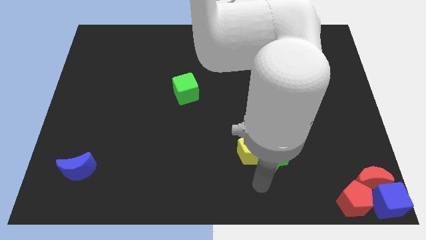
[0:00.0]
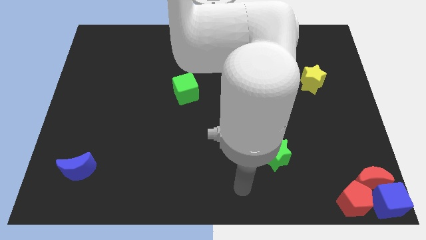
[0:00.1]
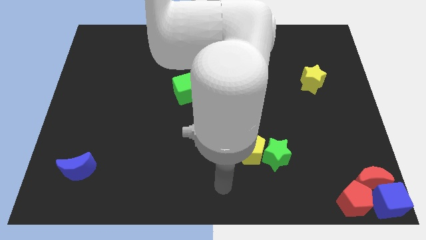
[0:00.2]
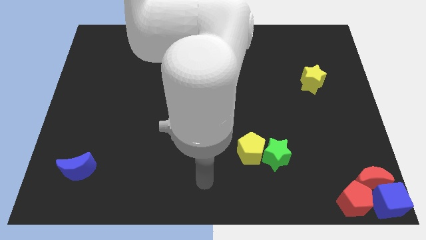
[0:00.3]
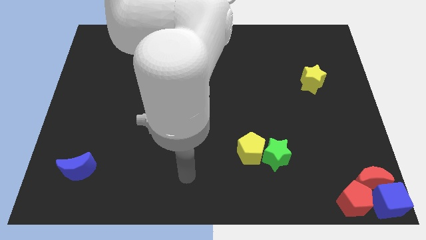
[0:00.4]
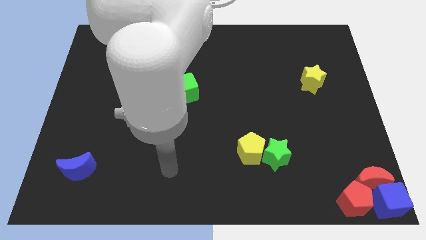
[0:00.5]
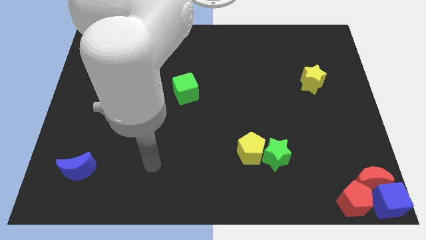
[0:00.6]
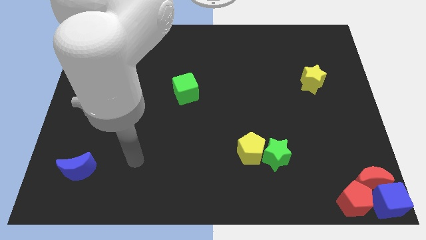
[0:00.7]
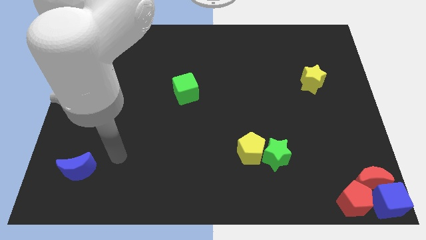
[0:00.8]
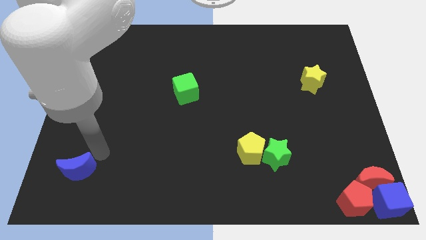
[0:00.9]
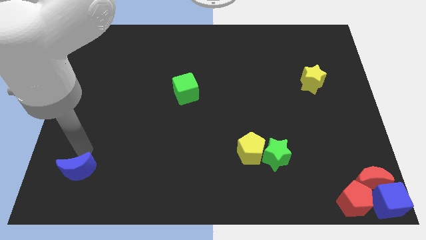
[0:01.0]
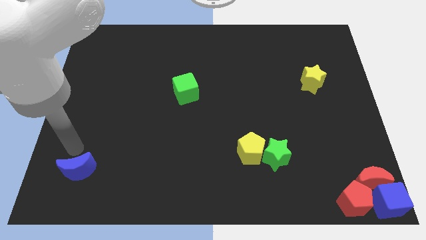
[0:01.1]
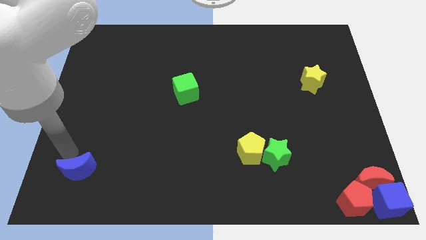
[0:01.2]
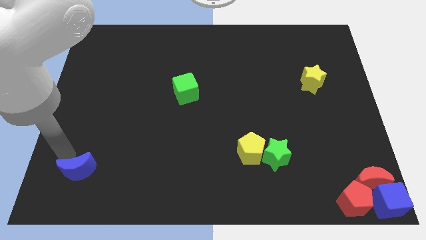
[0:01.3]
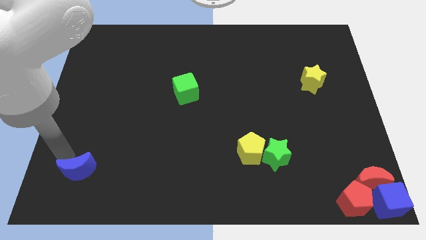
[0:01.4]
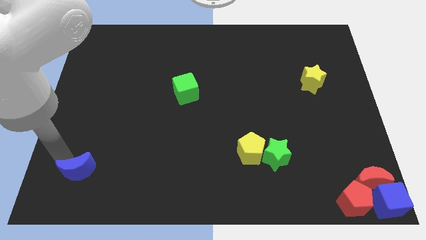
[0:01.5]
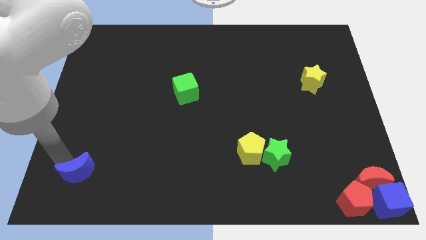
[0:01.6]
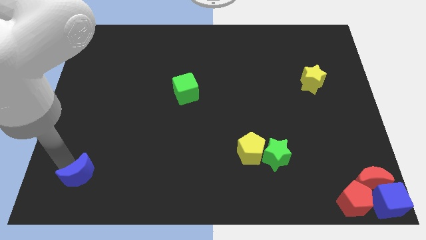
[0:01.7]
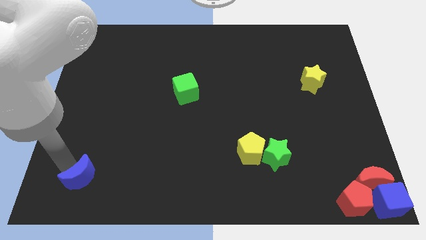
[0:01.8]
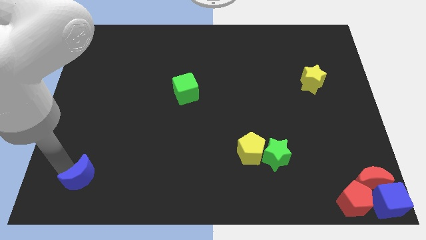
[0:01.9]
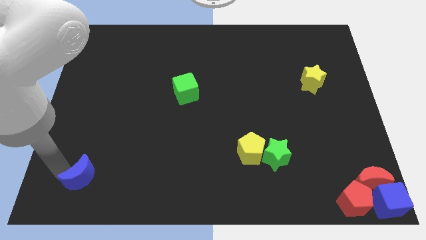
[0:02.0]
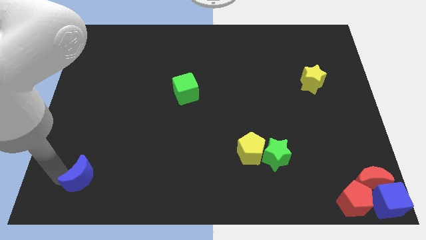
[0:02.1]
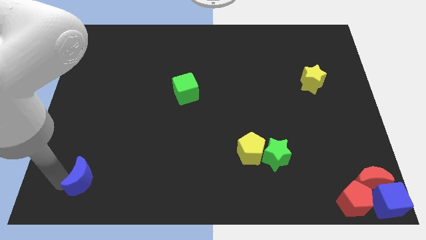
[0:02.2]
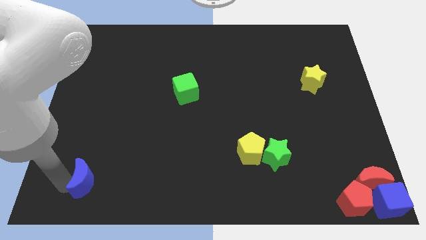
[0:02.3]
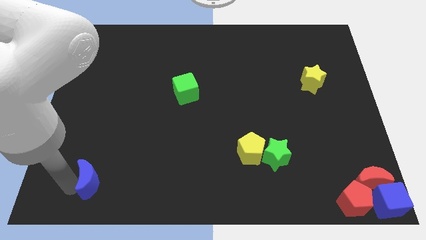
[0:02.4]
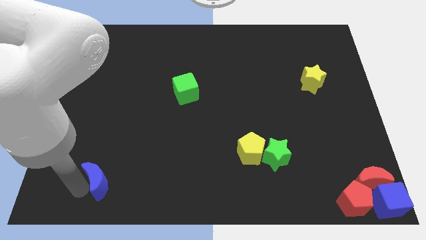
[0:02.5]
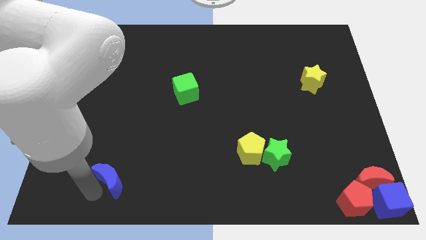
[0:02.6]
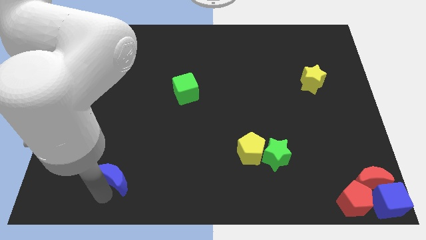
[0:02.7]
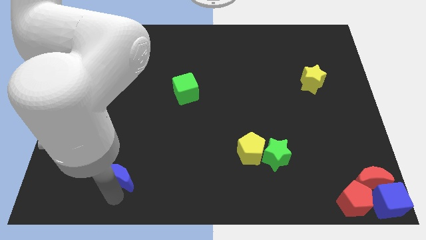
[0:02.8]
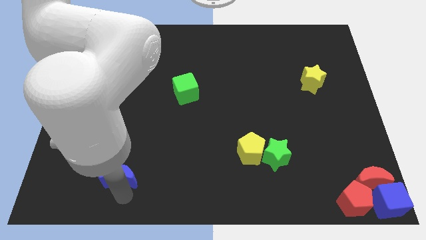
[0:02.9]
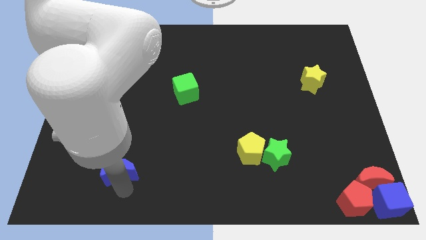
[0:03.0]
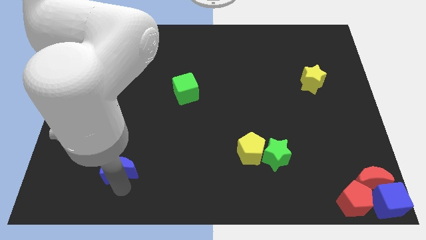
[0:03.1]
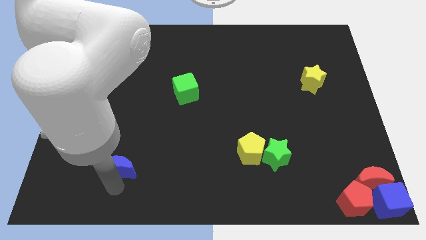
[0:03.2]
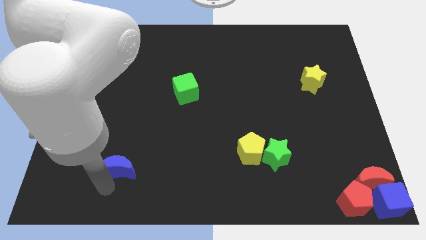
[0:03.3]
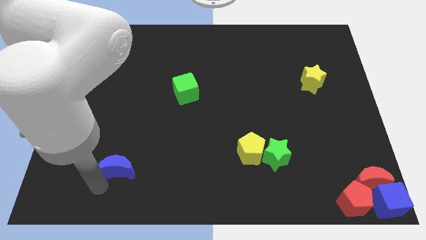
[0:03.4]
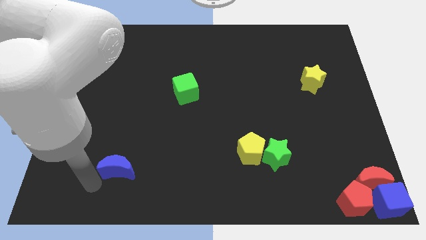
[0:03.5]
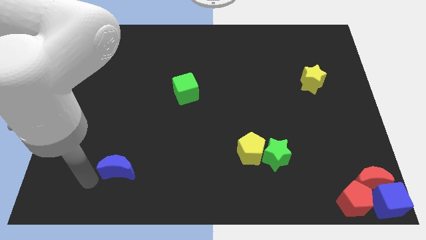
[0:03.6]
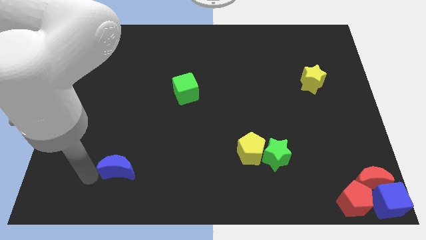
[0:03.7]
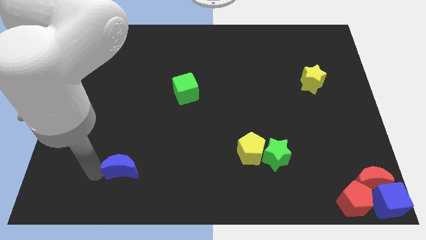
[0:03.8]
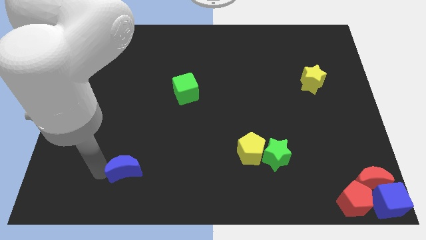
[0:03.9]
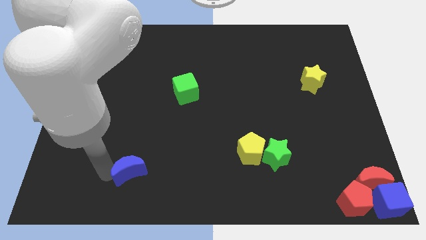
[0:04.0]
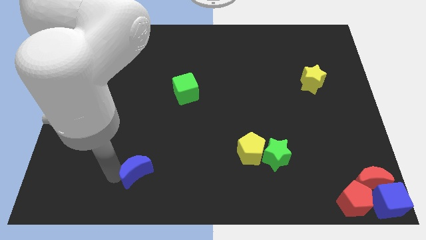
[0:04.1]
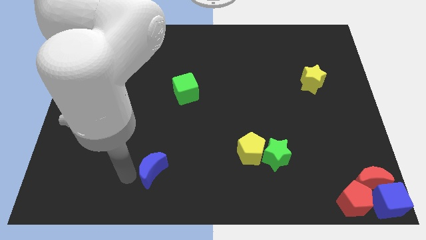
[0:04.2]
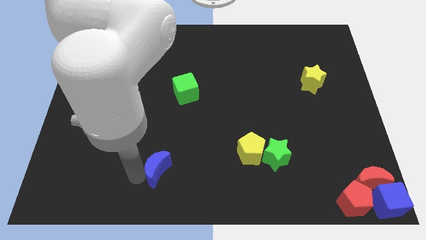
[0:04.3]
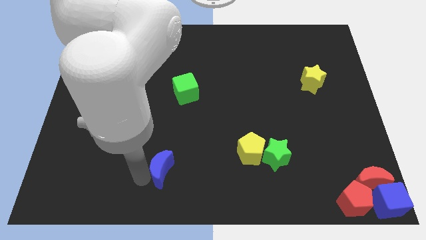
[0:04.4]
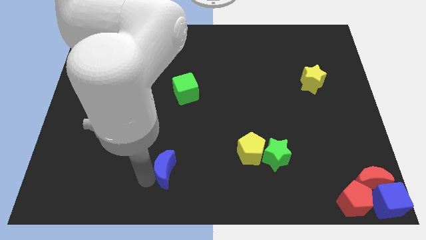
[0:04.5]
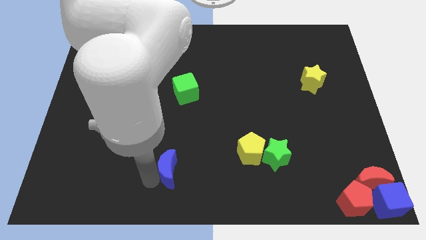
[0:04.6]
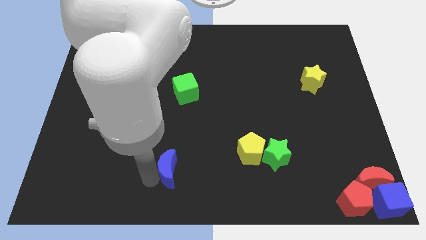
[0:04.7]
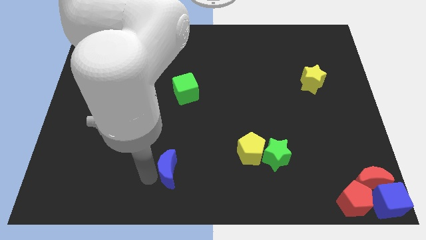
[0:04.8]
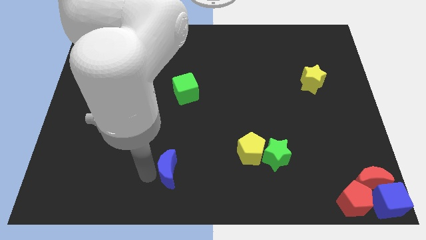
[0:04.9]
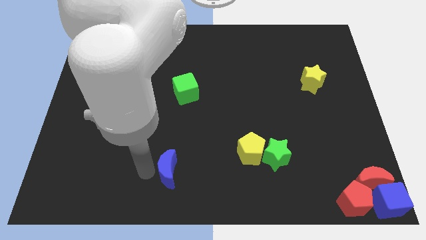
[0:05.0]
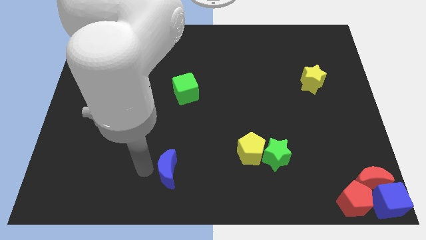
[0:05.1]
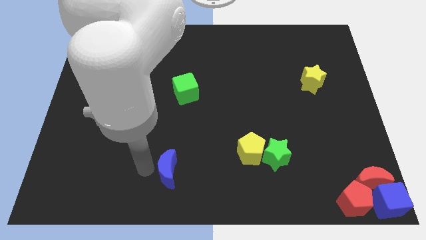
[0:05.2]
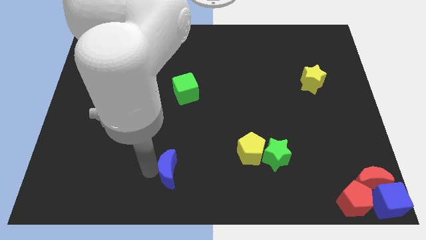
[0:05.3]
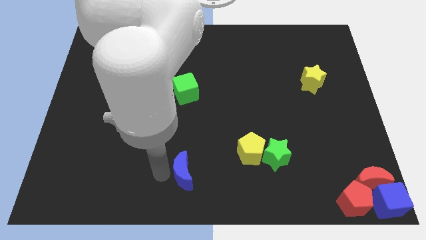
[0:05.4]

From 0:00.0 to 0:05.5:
push the blue crescent to the bottom of the green cube

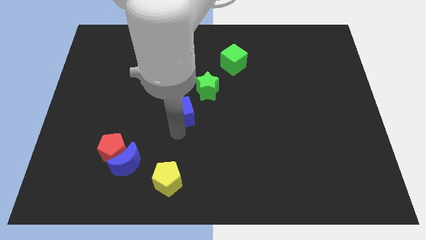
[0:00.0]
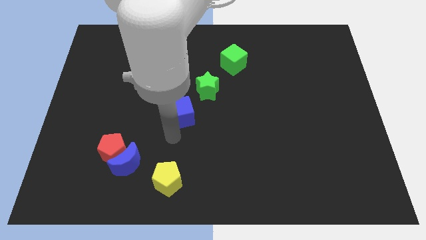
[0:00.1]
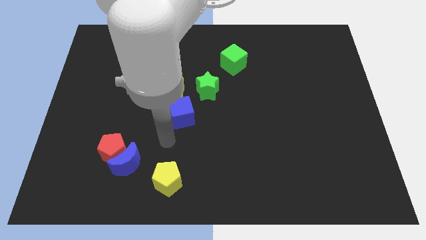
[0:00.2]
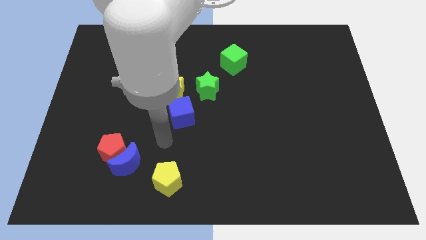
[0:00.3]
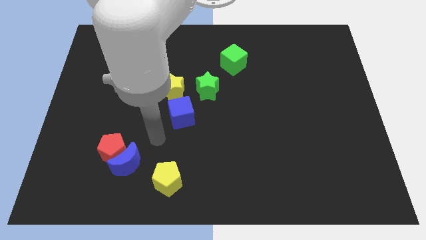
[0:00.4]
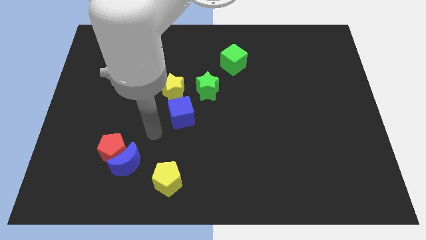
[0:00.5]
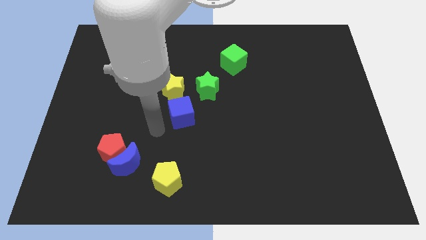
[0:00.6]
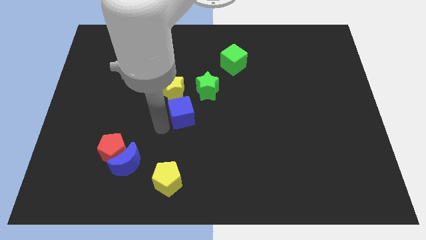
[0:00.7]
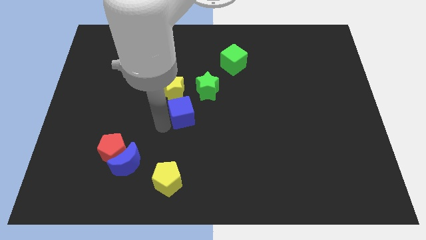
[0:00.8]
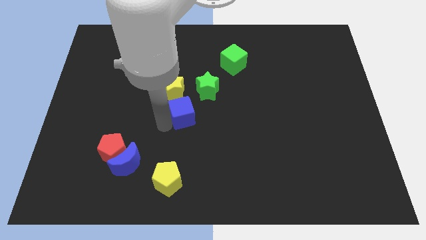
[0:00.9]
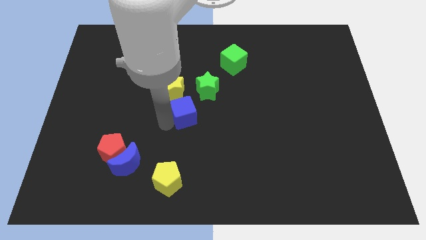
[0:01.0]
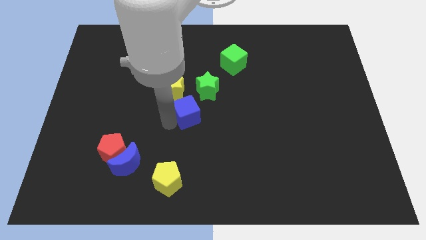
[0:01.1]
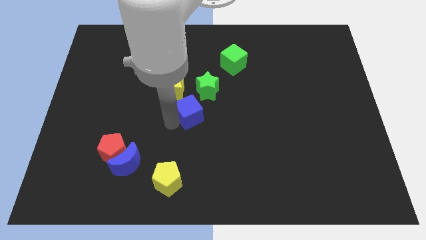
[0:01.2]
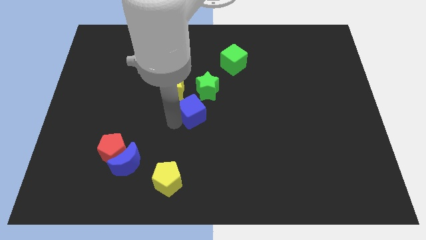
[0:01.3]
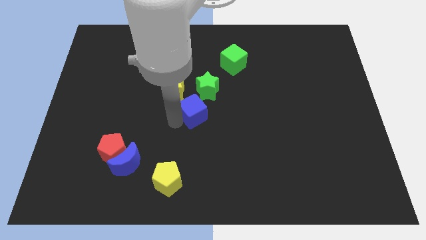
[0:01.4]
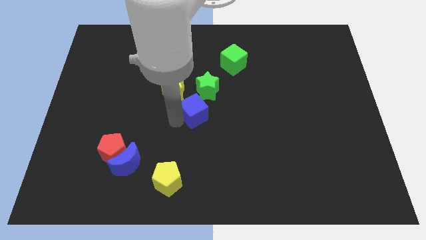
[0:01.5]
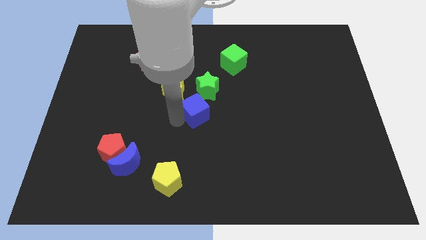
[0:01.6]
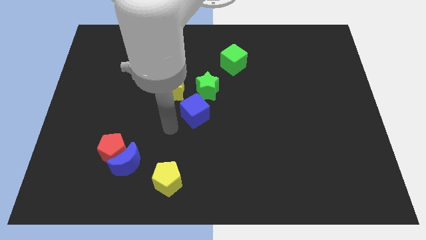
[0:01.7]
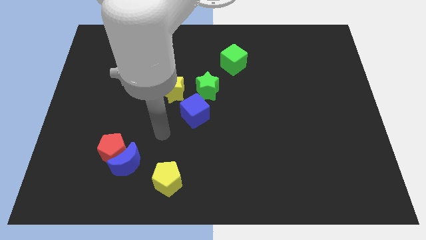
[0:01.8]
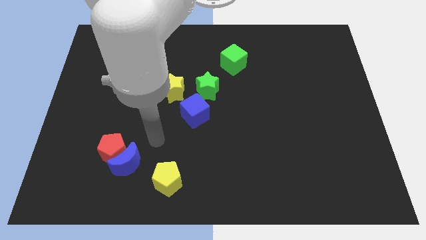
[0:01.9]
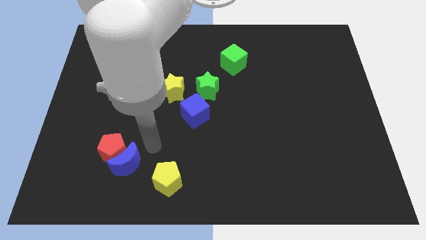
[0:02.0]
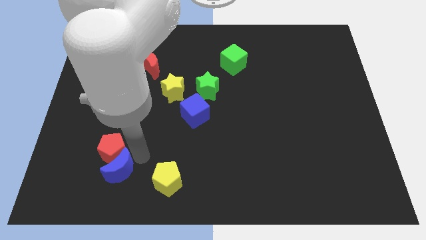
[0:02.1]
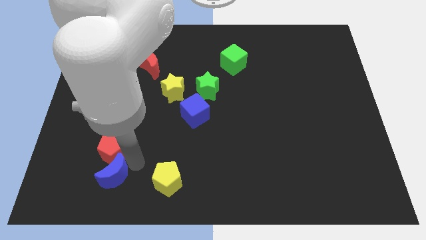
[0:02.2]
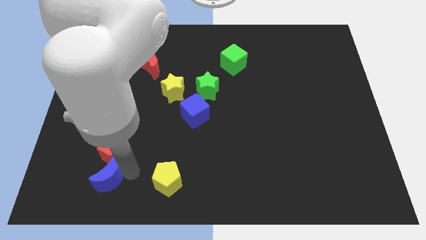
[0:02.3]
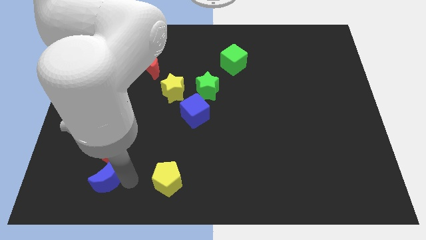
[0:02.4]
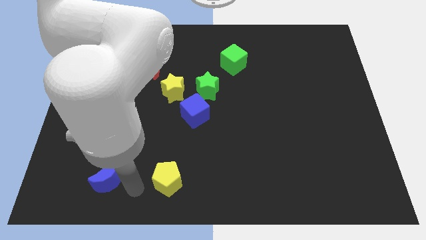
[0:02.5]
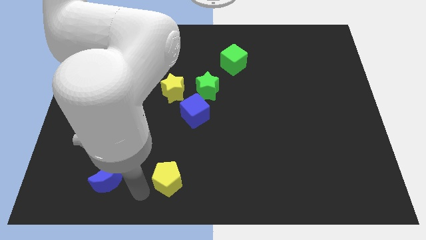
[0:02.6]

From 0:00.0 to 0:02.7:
push blue crescent slightly downward

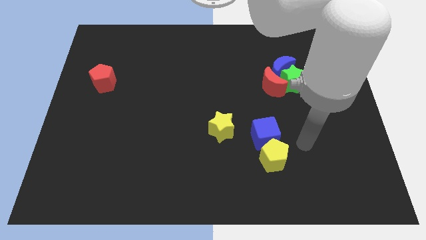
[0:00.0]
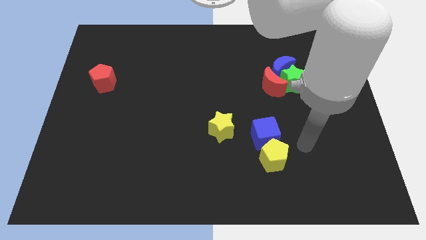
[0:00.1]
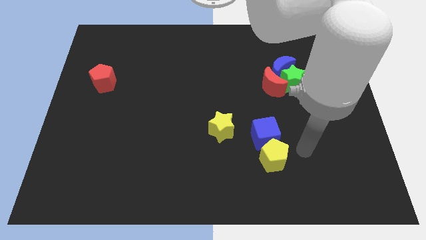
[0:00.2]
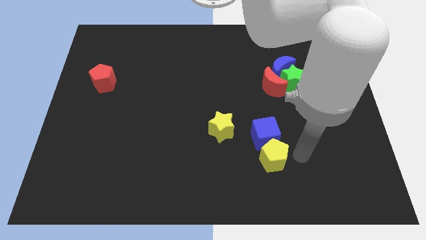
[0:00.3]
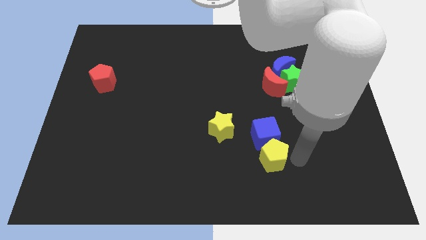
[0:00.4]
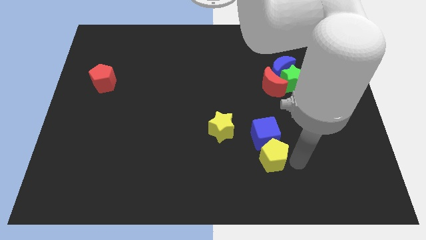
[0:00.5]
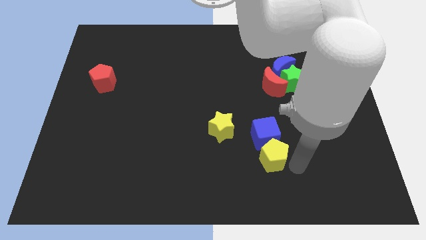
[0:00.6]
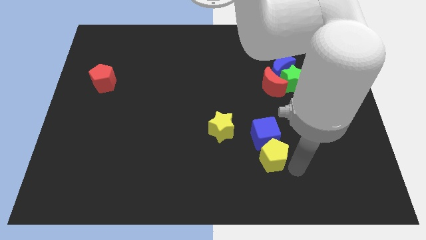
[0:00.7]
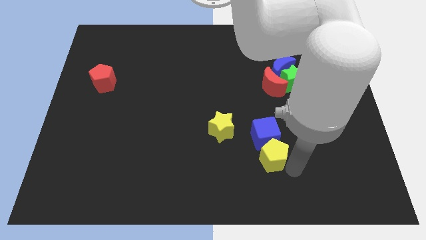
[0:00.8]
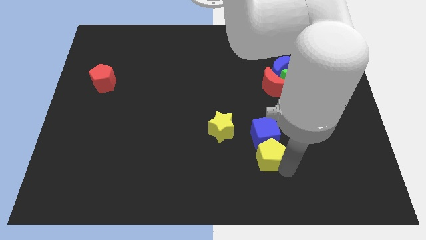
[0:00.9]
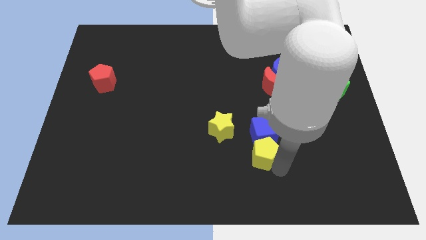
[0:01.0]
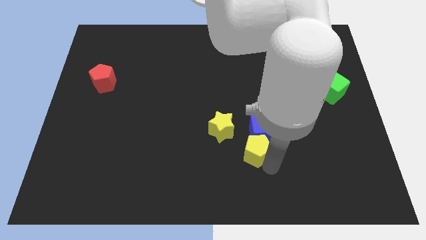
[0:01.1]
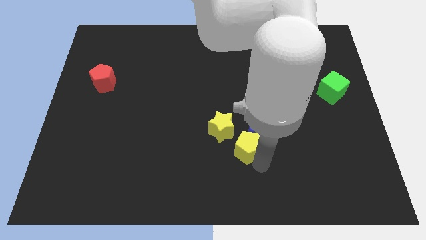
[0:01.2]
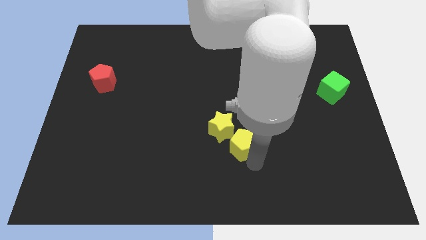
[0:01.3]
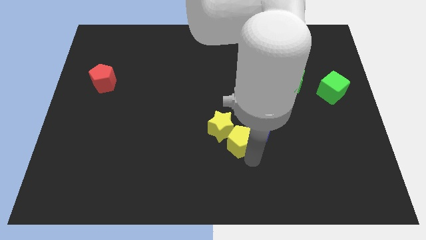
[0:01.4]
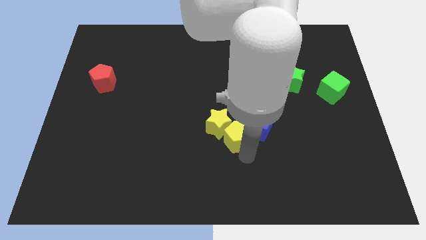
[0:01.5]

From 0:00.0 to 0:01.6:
push the yellow pentagon into the yellow star
